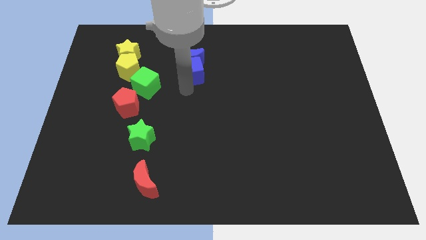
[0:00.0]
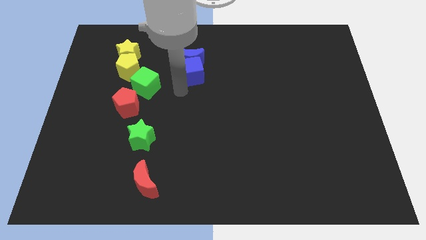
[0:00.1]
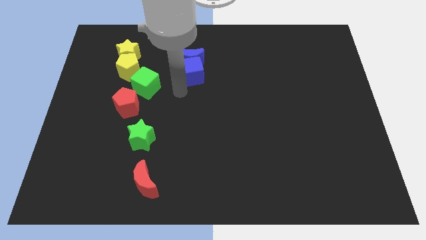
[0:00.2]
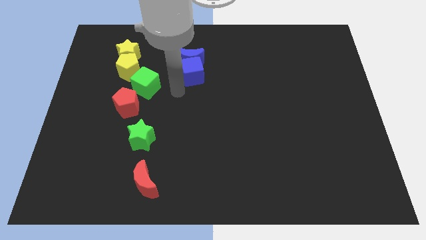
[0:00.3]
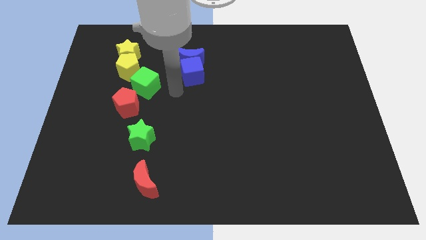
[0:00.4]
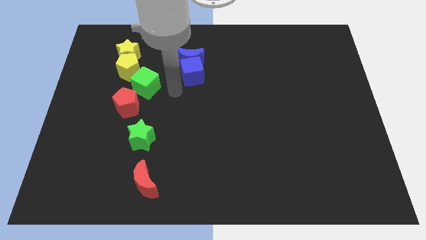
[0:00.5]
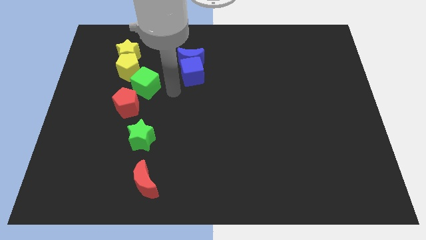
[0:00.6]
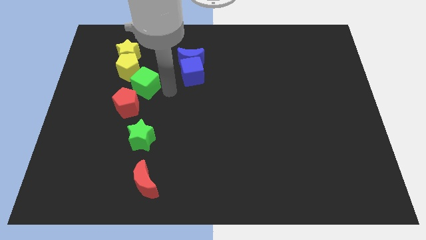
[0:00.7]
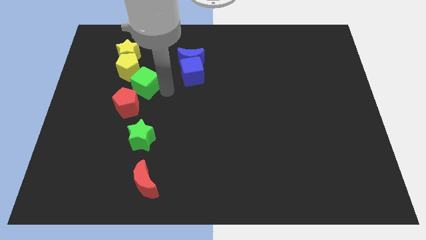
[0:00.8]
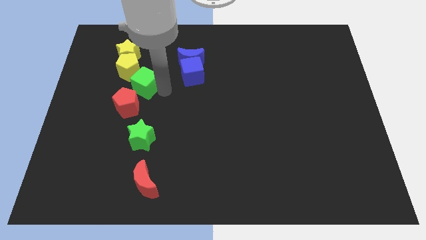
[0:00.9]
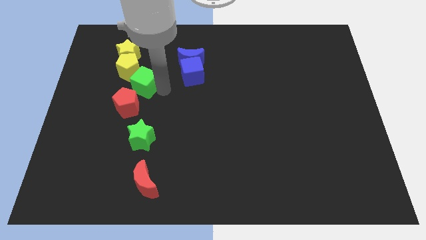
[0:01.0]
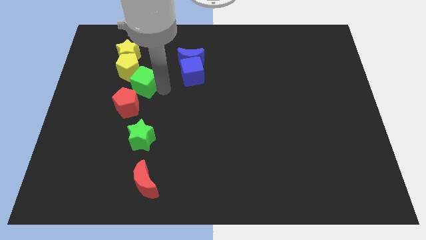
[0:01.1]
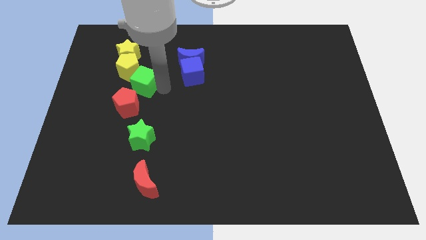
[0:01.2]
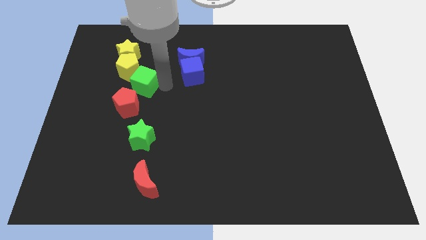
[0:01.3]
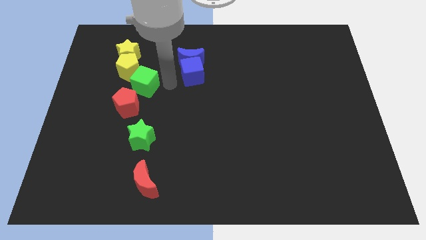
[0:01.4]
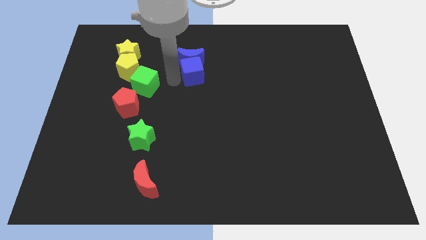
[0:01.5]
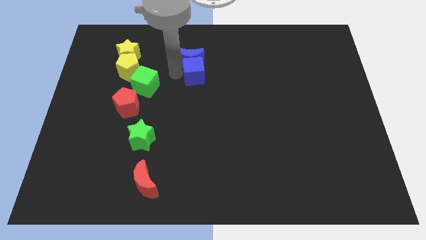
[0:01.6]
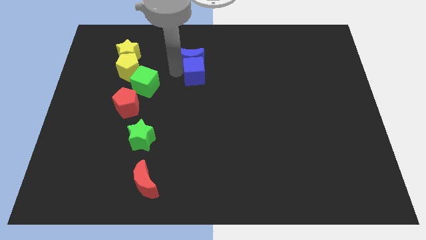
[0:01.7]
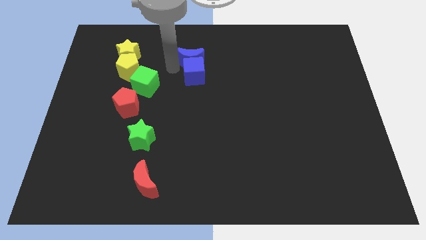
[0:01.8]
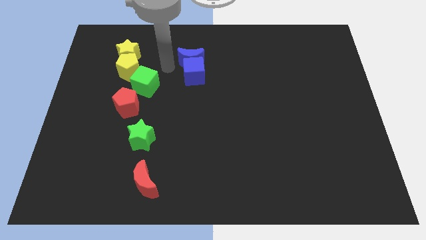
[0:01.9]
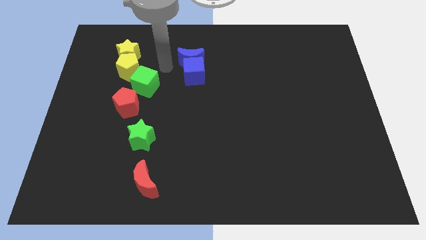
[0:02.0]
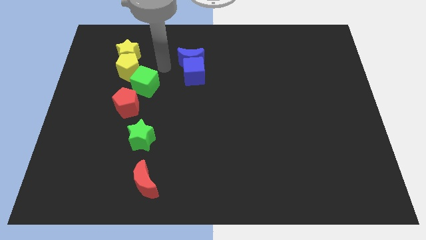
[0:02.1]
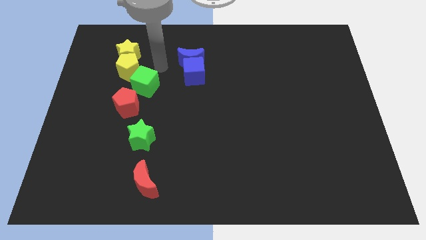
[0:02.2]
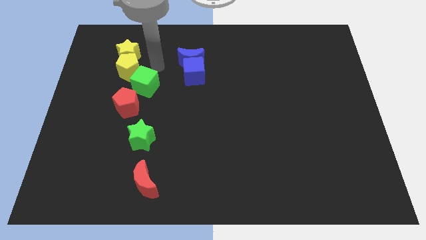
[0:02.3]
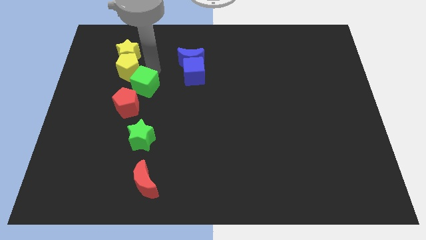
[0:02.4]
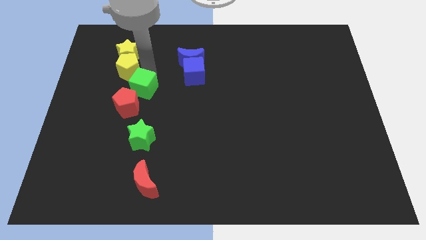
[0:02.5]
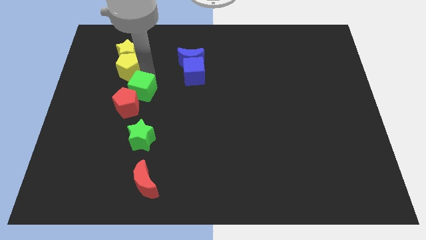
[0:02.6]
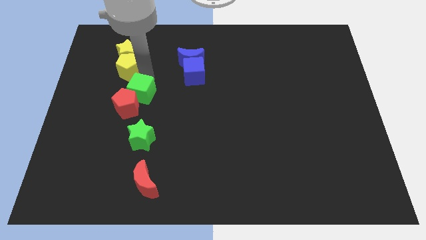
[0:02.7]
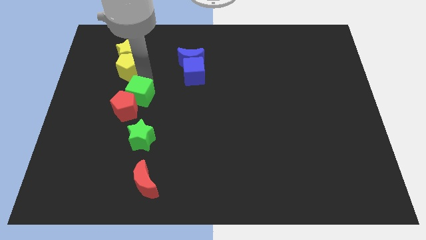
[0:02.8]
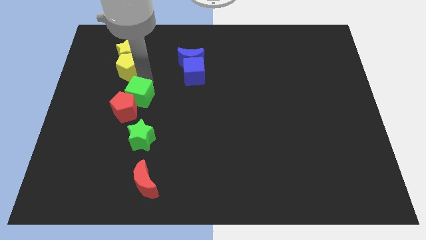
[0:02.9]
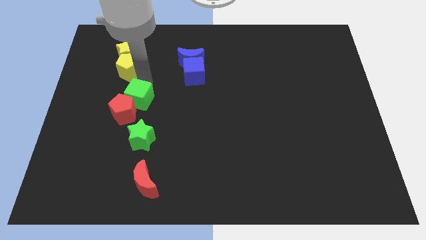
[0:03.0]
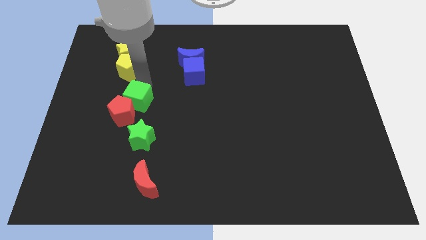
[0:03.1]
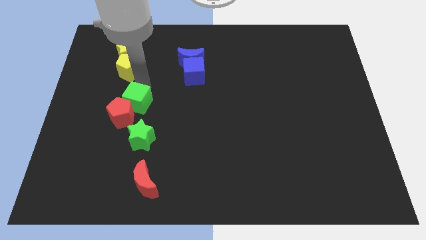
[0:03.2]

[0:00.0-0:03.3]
push the green cube into the red pentagon

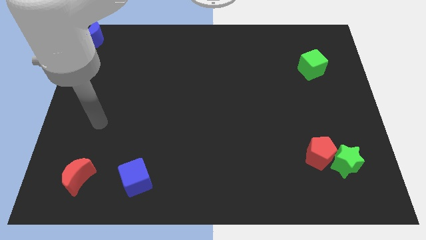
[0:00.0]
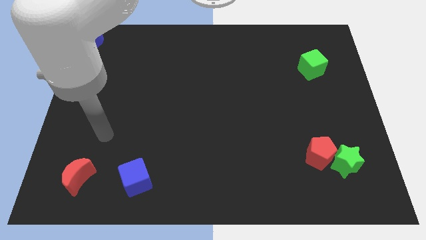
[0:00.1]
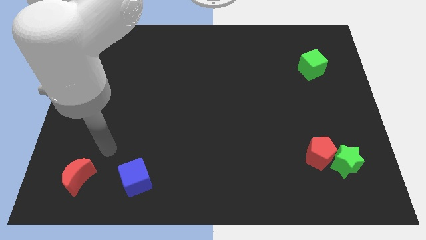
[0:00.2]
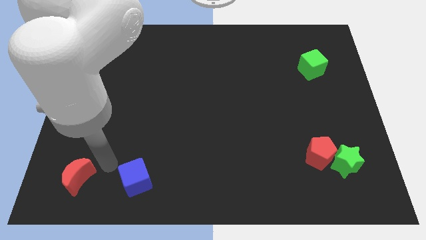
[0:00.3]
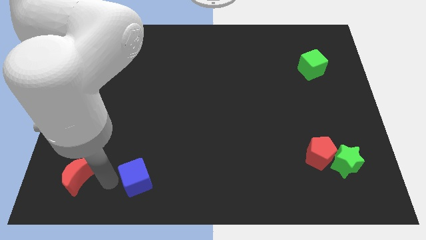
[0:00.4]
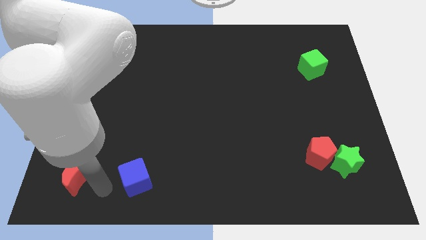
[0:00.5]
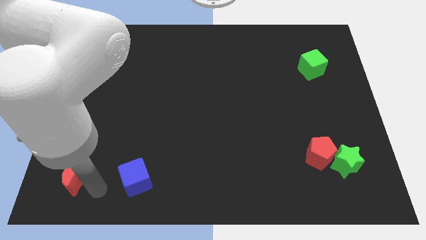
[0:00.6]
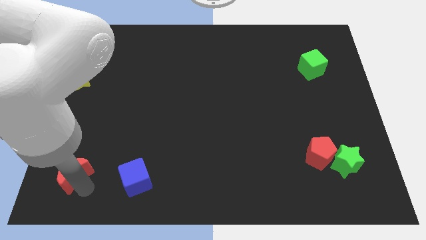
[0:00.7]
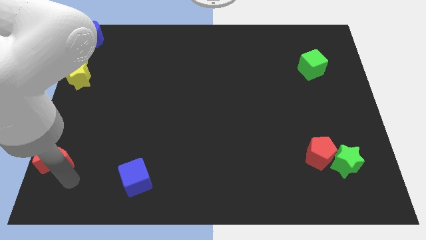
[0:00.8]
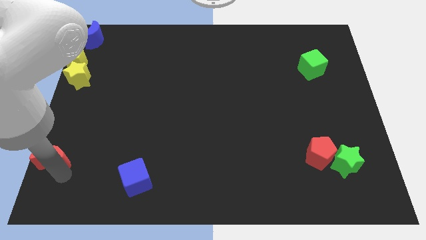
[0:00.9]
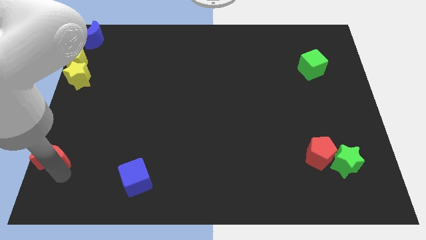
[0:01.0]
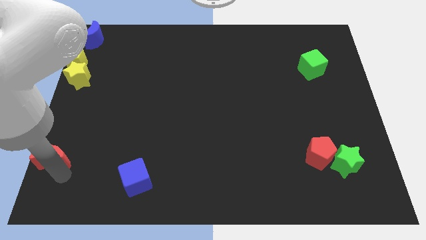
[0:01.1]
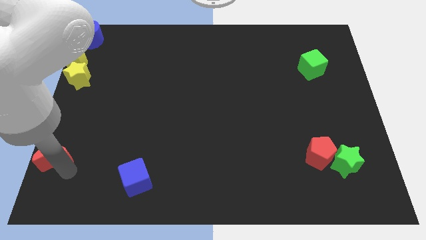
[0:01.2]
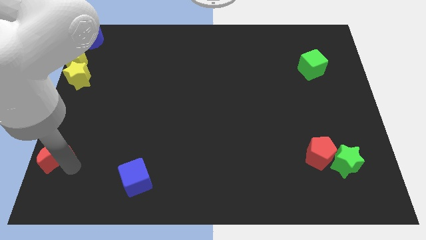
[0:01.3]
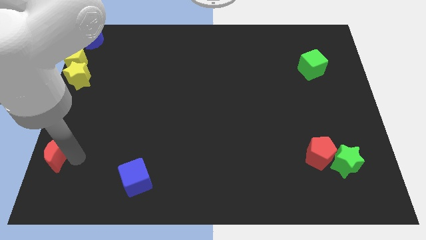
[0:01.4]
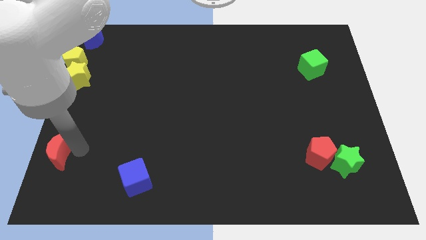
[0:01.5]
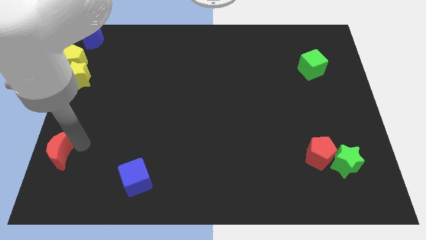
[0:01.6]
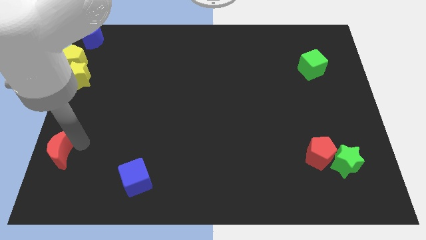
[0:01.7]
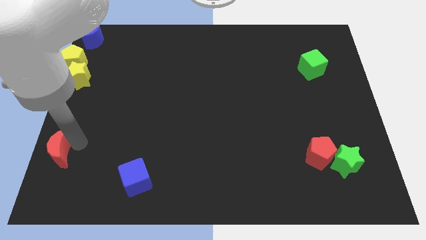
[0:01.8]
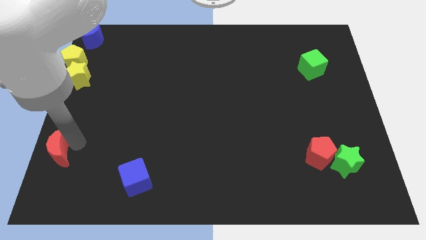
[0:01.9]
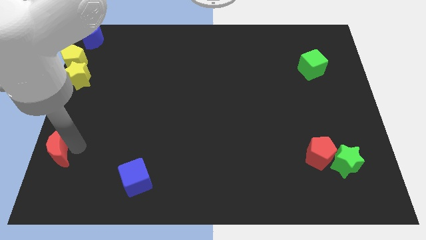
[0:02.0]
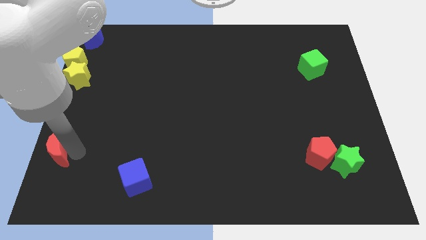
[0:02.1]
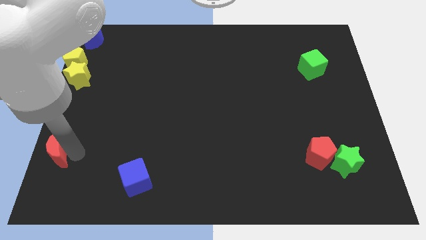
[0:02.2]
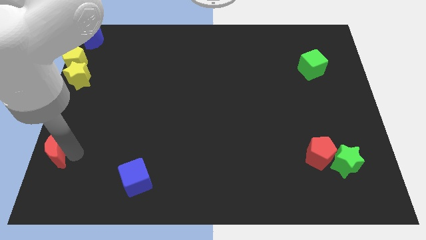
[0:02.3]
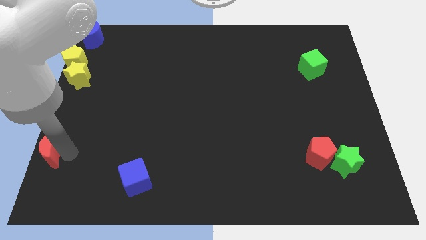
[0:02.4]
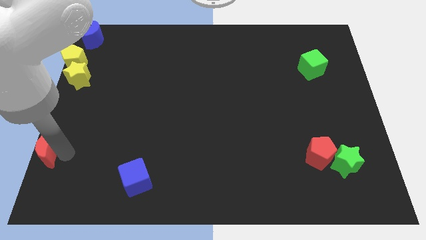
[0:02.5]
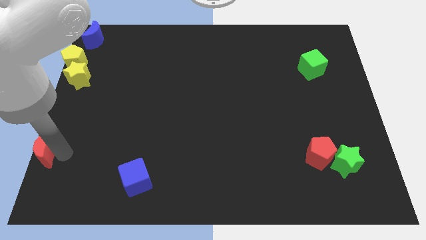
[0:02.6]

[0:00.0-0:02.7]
push red moon towards bottom left of the board

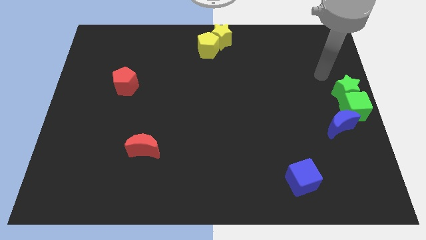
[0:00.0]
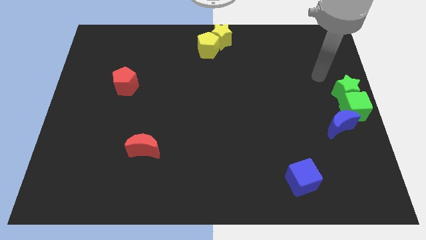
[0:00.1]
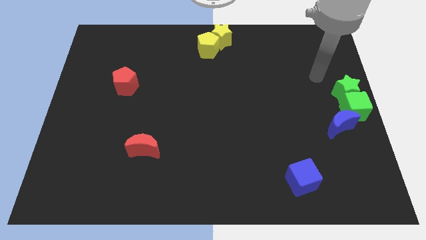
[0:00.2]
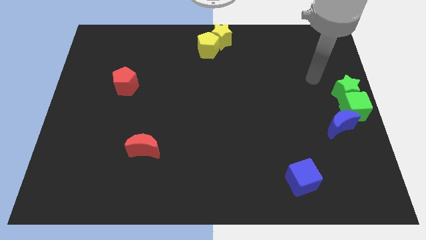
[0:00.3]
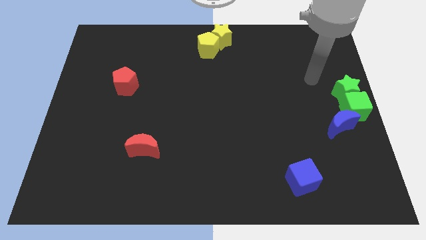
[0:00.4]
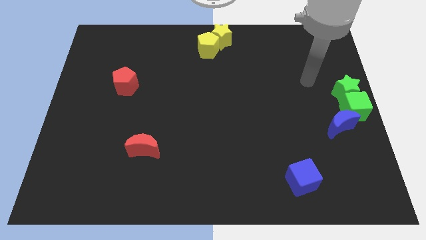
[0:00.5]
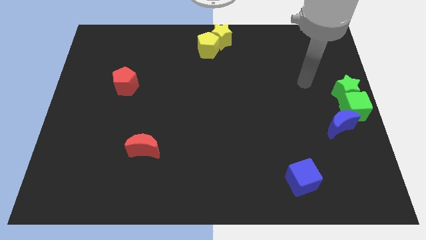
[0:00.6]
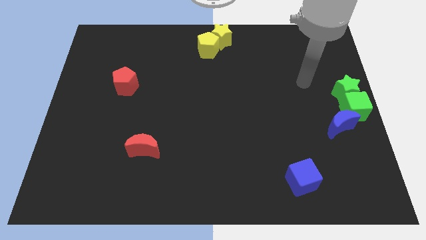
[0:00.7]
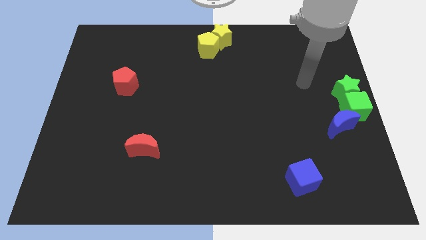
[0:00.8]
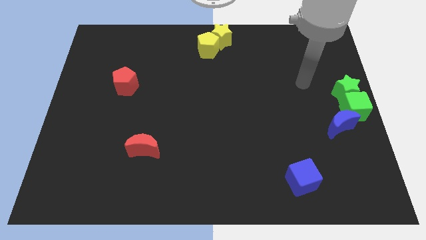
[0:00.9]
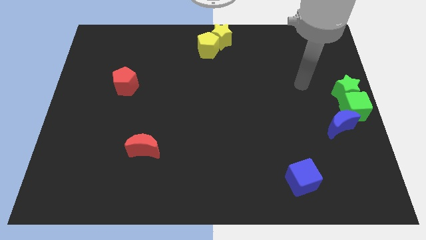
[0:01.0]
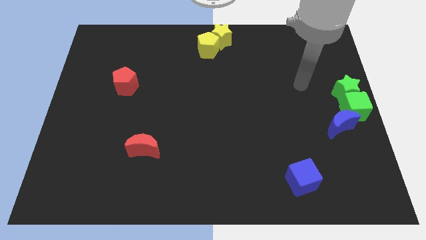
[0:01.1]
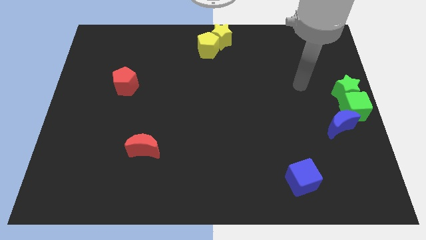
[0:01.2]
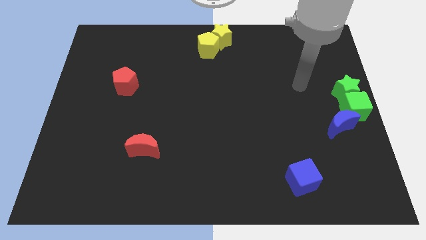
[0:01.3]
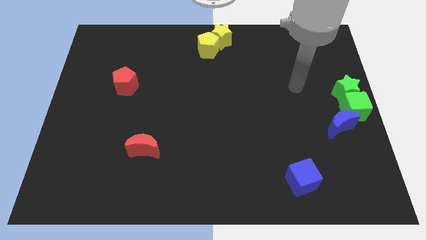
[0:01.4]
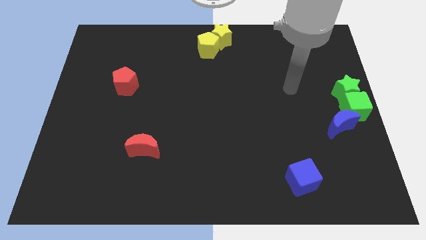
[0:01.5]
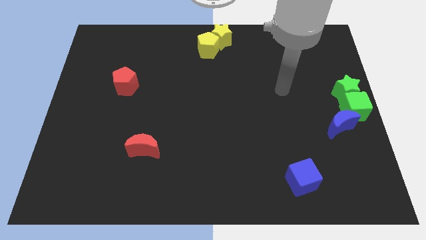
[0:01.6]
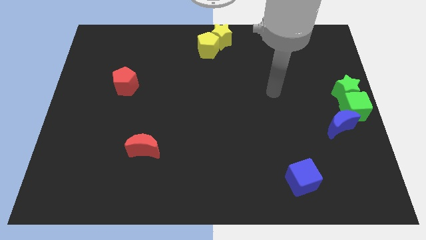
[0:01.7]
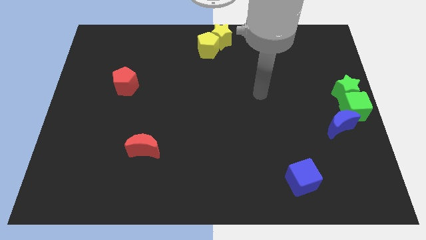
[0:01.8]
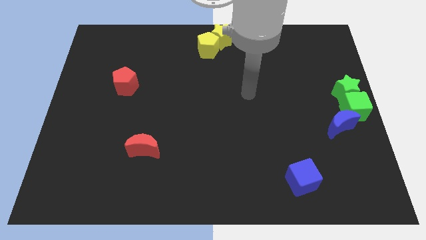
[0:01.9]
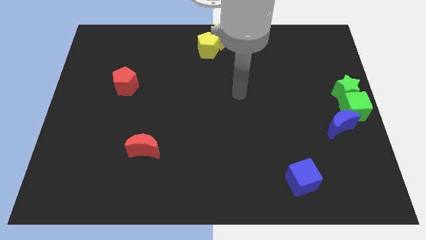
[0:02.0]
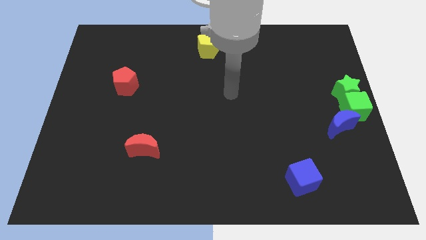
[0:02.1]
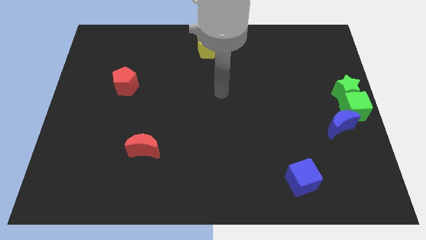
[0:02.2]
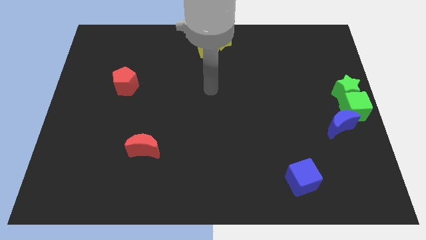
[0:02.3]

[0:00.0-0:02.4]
move the arm to bottom of the yellow pentagon

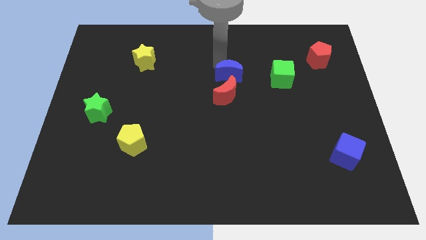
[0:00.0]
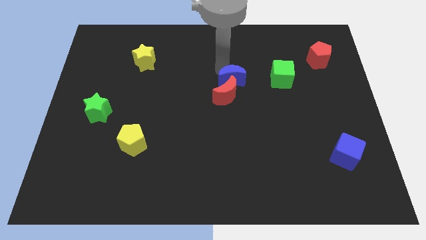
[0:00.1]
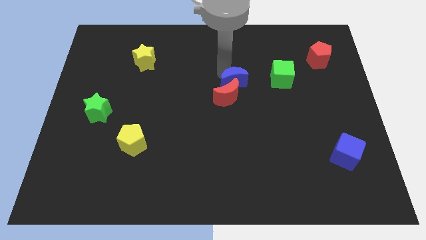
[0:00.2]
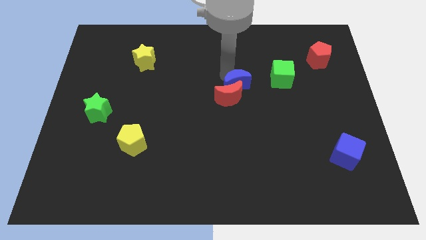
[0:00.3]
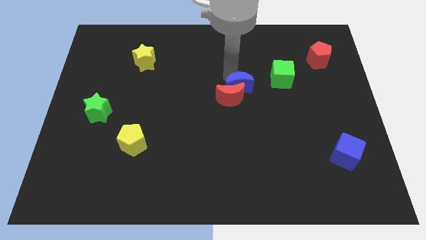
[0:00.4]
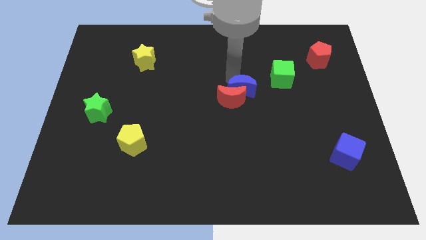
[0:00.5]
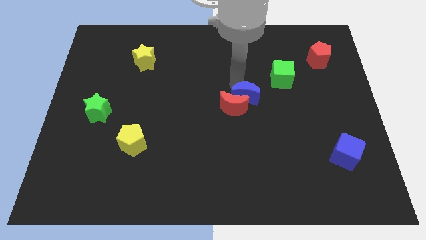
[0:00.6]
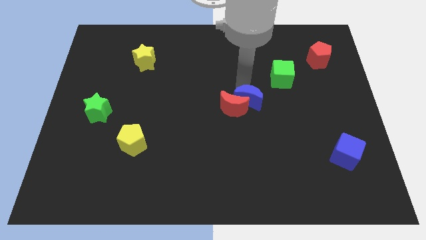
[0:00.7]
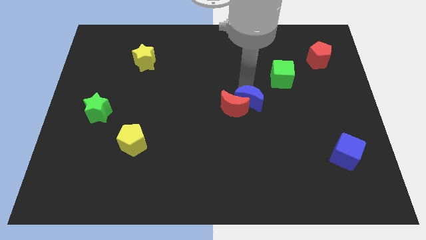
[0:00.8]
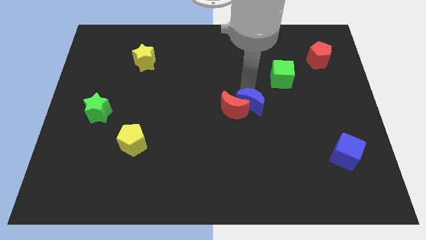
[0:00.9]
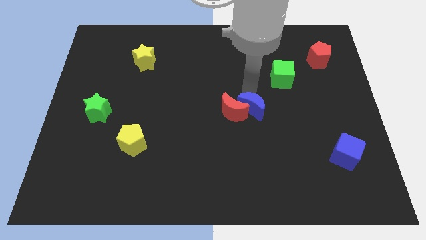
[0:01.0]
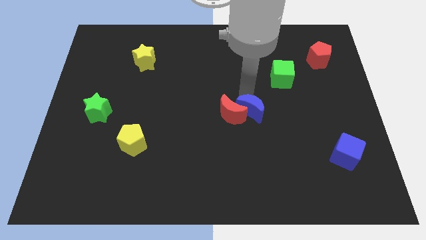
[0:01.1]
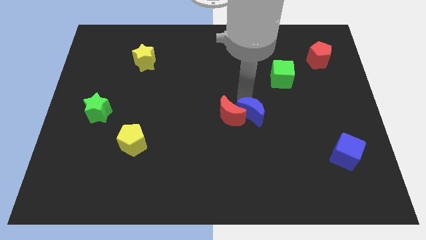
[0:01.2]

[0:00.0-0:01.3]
push the blue crescent along with the red crescent slightly to the down
